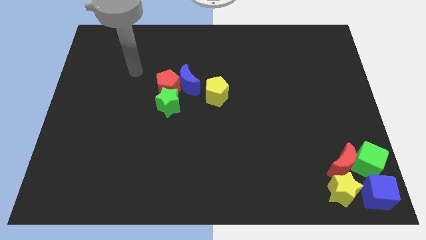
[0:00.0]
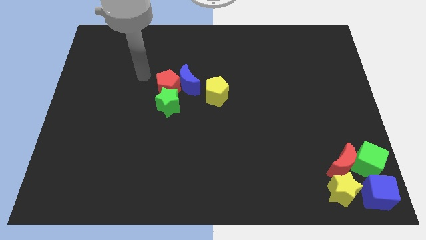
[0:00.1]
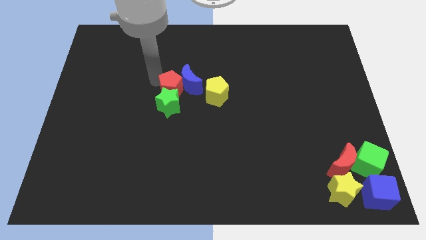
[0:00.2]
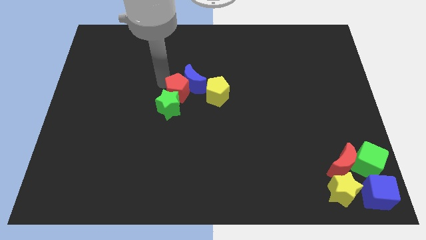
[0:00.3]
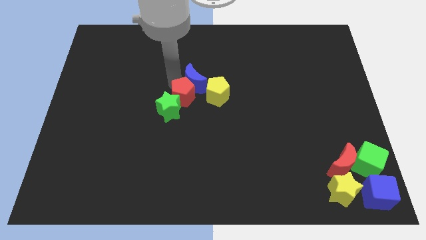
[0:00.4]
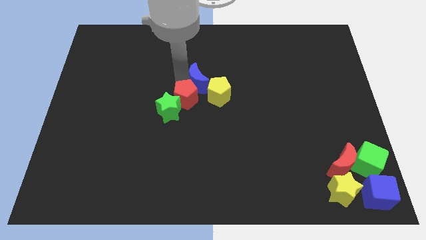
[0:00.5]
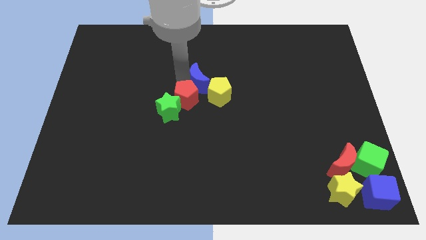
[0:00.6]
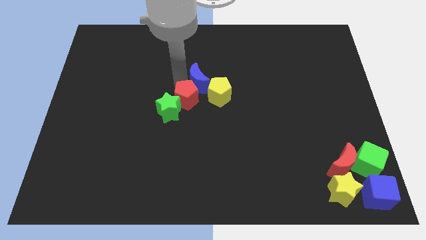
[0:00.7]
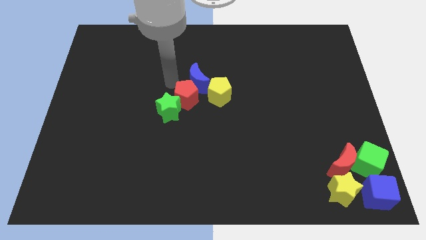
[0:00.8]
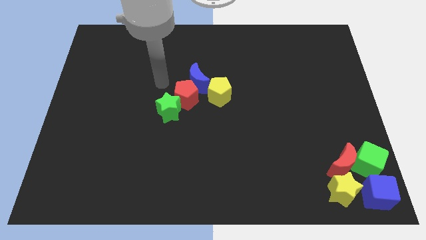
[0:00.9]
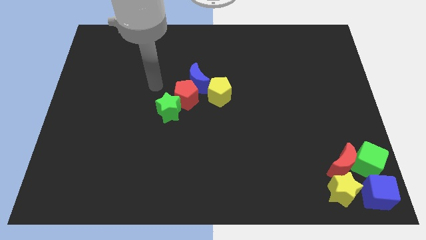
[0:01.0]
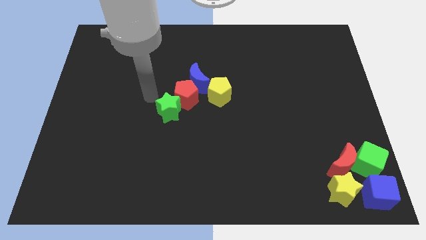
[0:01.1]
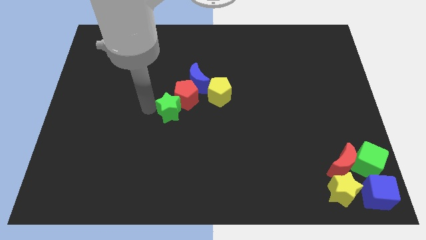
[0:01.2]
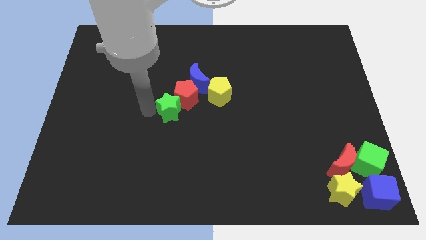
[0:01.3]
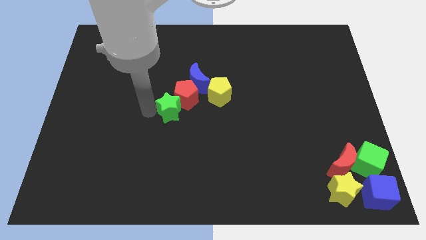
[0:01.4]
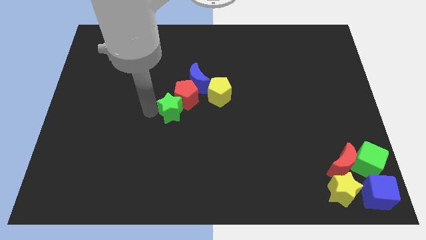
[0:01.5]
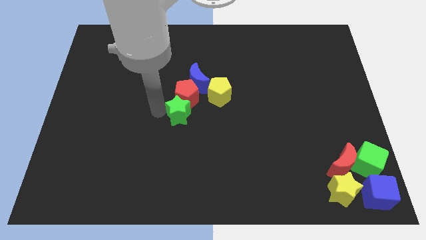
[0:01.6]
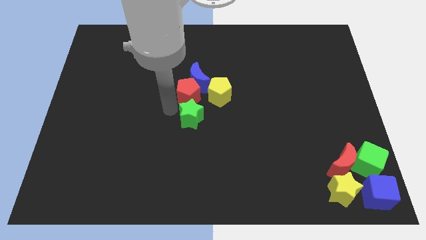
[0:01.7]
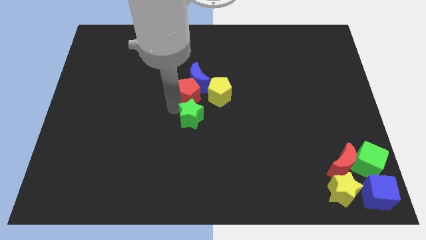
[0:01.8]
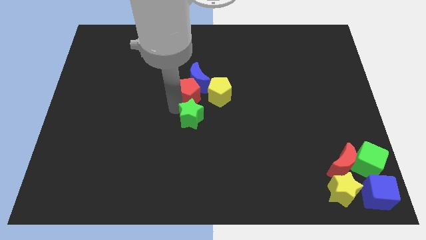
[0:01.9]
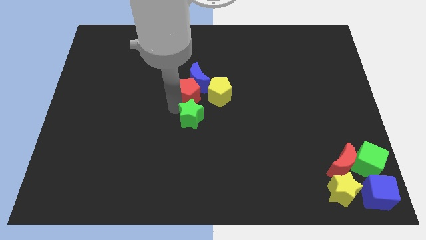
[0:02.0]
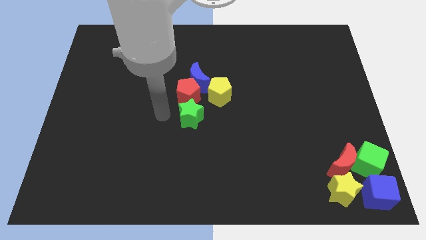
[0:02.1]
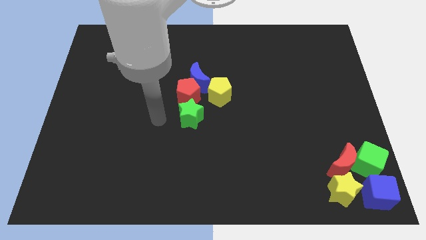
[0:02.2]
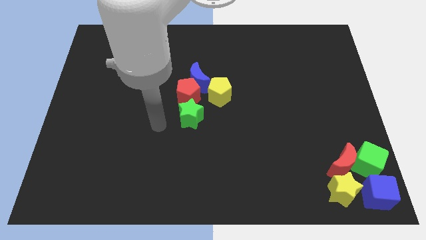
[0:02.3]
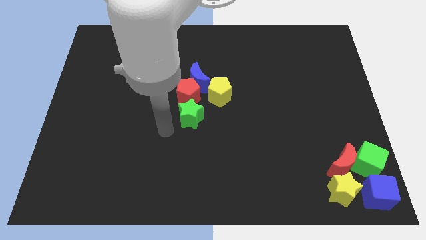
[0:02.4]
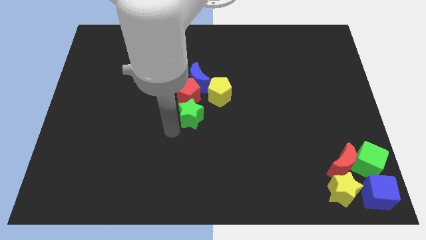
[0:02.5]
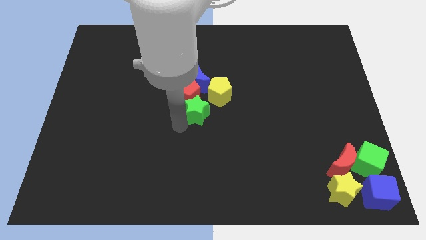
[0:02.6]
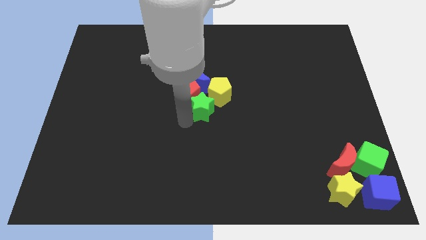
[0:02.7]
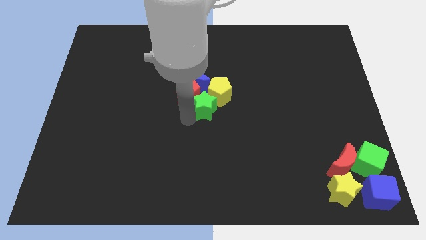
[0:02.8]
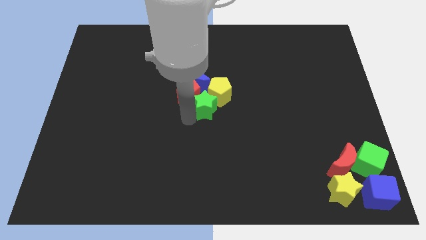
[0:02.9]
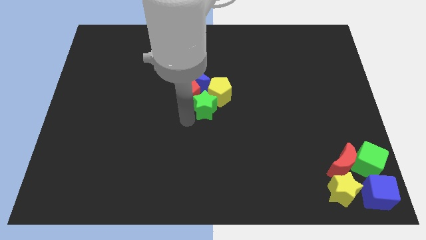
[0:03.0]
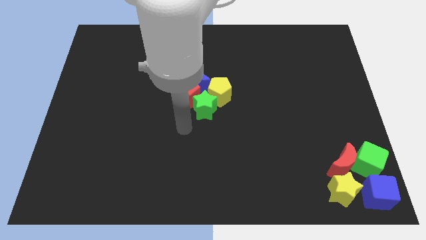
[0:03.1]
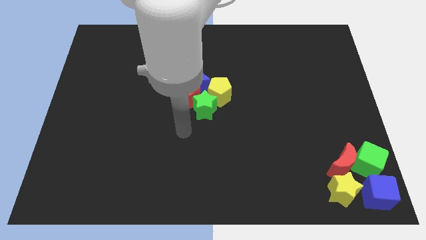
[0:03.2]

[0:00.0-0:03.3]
adjust the red pentagon and the green star to form a group of four blocks

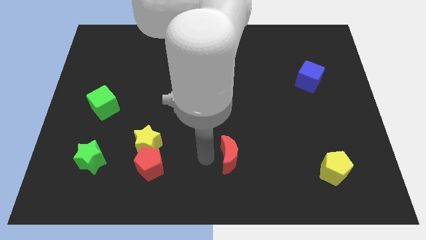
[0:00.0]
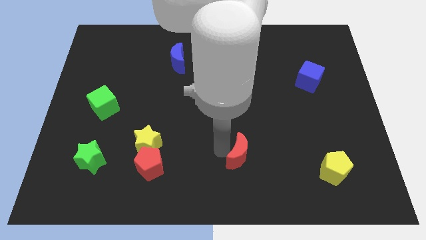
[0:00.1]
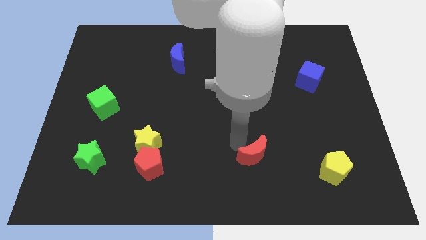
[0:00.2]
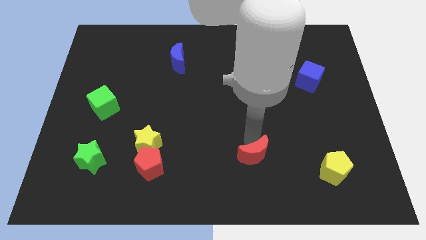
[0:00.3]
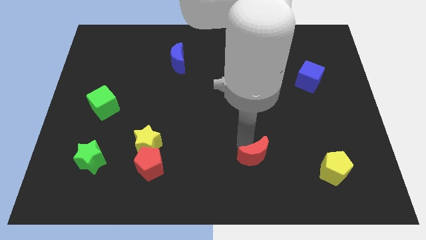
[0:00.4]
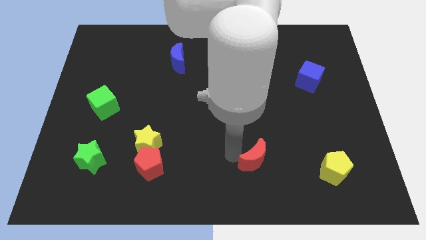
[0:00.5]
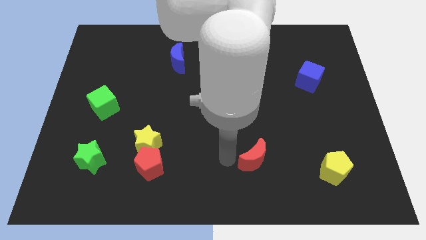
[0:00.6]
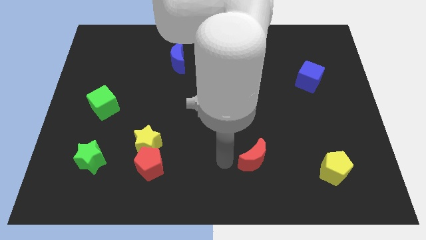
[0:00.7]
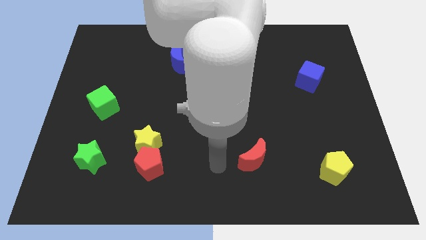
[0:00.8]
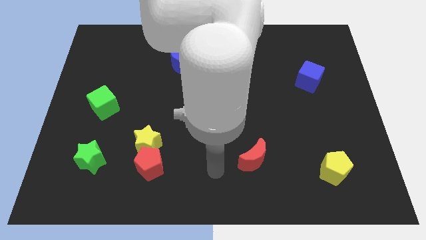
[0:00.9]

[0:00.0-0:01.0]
move red moon towards yellow pentagon

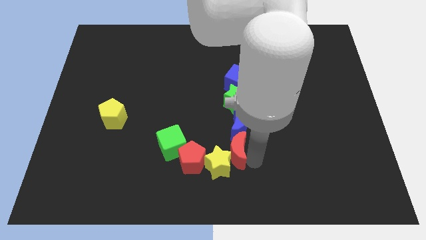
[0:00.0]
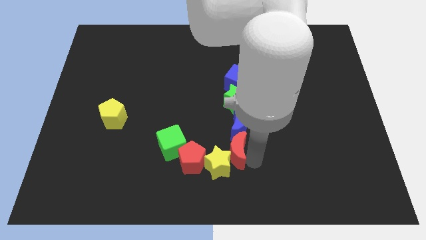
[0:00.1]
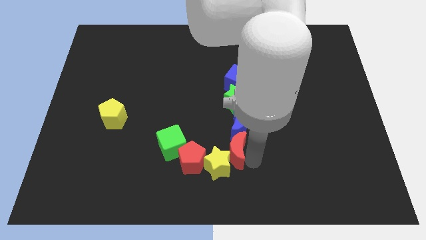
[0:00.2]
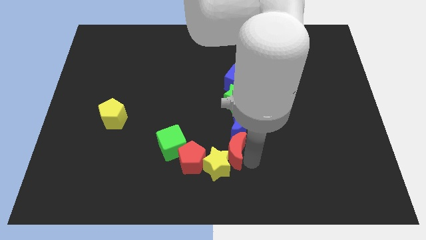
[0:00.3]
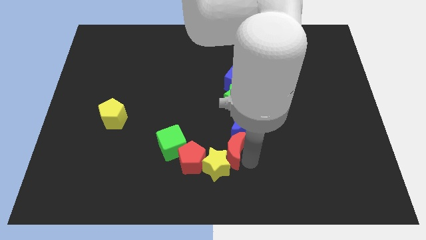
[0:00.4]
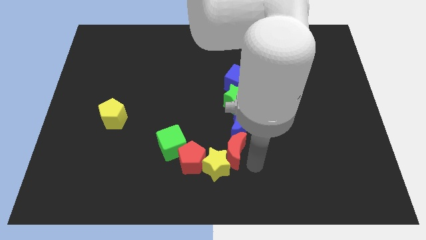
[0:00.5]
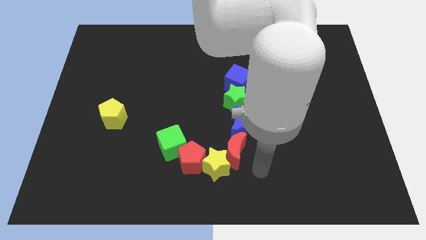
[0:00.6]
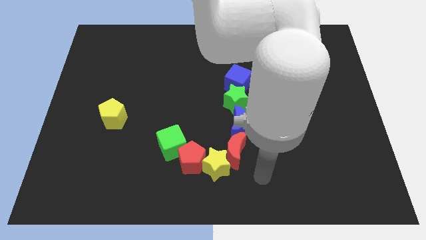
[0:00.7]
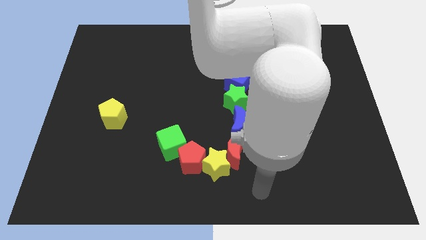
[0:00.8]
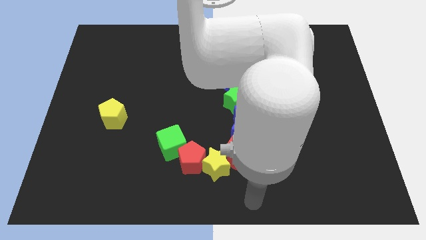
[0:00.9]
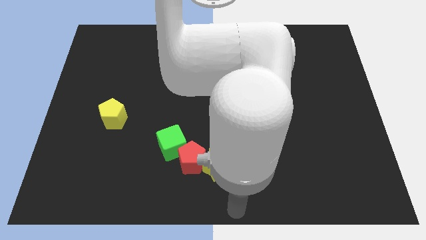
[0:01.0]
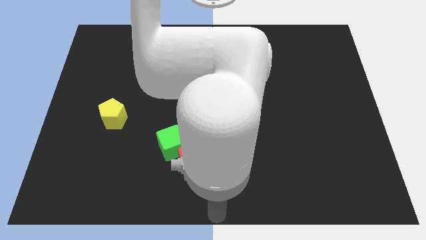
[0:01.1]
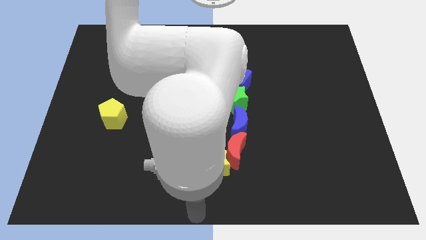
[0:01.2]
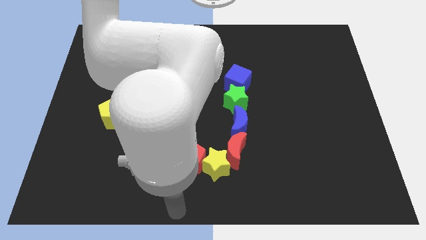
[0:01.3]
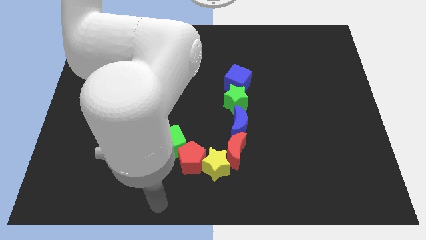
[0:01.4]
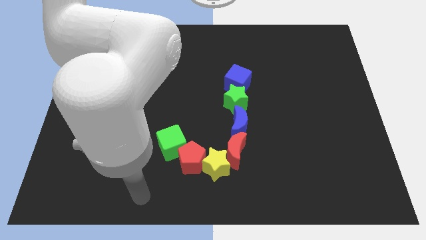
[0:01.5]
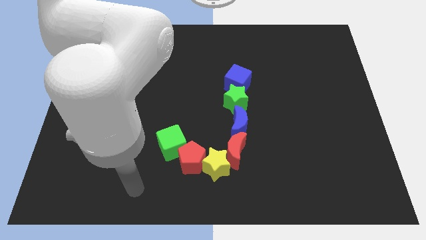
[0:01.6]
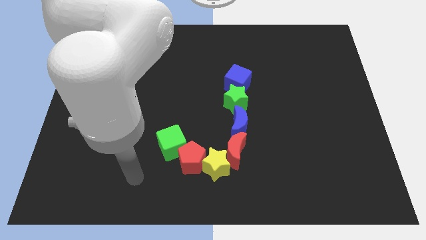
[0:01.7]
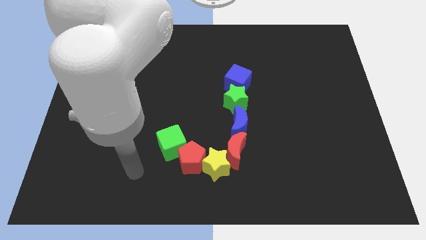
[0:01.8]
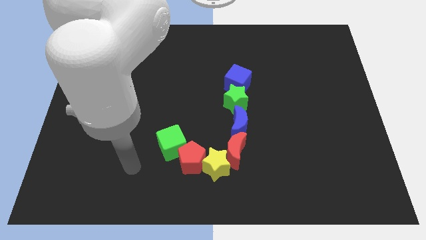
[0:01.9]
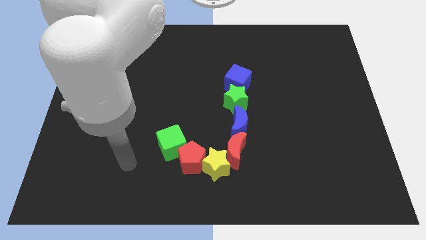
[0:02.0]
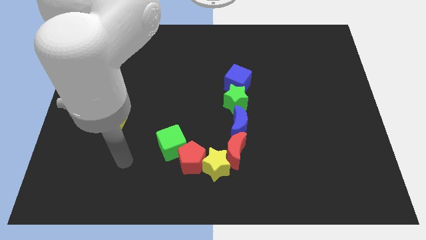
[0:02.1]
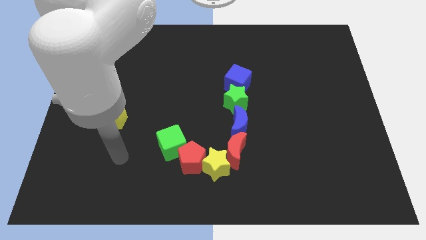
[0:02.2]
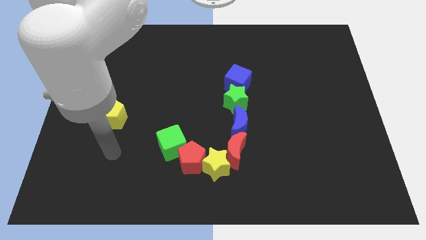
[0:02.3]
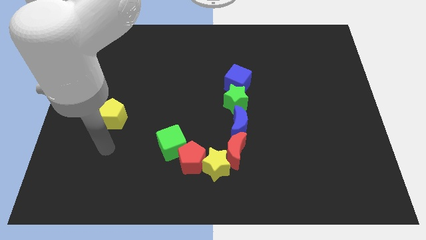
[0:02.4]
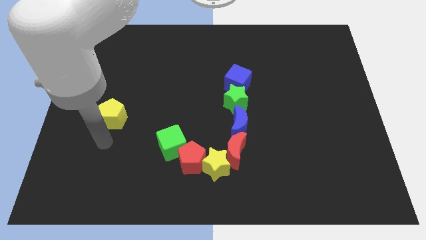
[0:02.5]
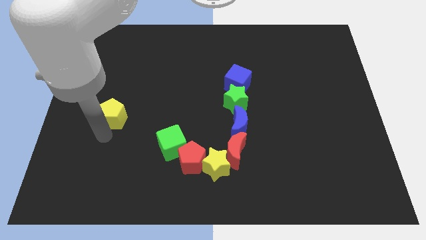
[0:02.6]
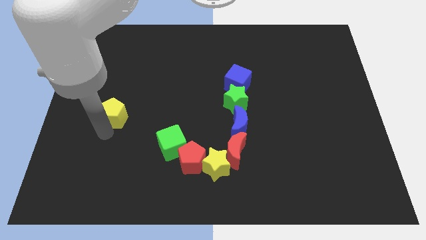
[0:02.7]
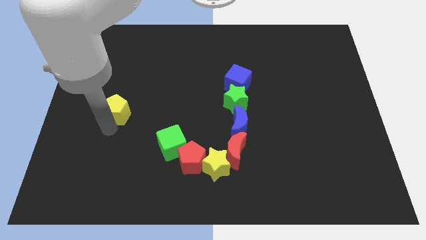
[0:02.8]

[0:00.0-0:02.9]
move your arm away from red moon

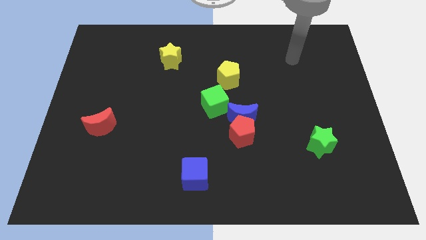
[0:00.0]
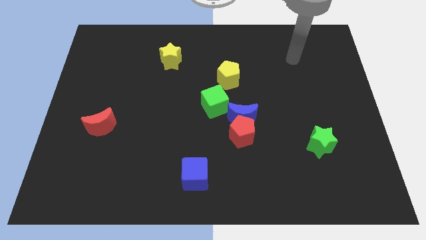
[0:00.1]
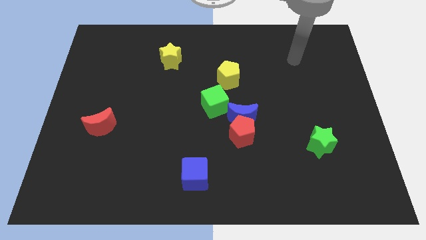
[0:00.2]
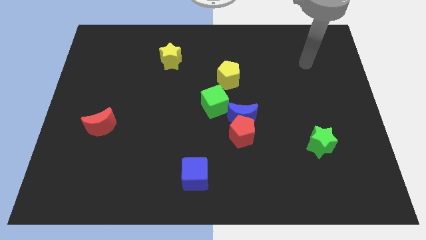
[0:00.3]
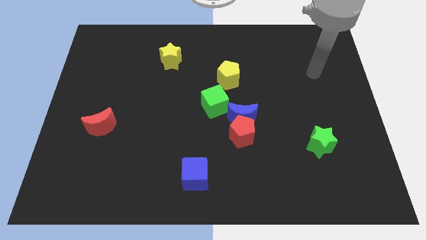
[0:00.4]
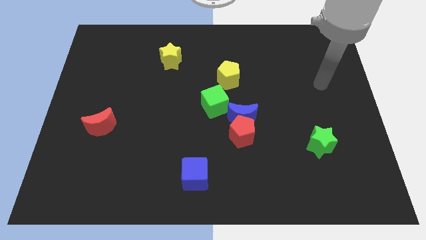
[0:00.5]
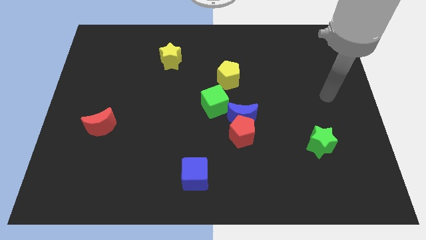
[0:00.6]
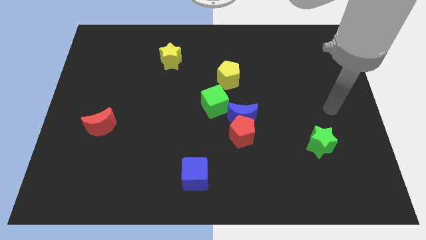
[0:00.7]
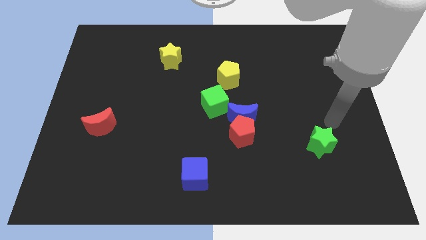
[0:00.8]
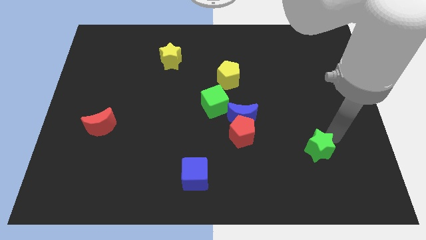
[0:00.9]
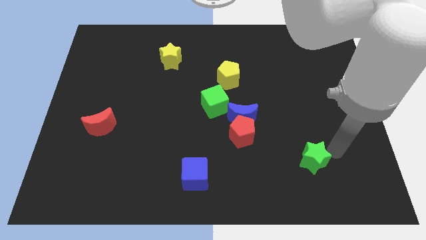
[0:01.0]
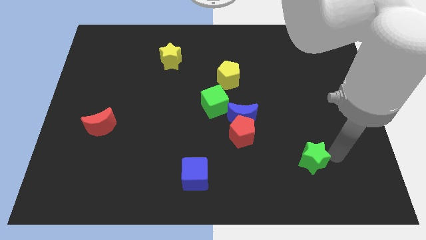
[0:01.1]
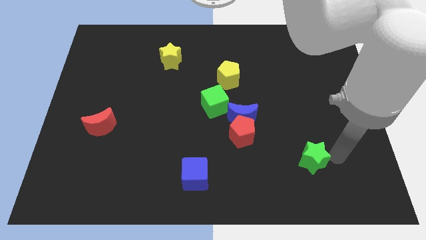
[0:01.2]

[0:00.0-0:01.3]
move the arm to the right of the green star

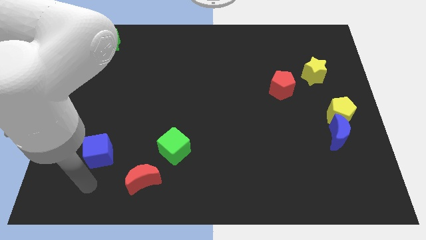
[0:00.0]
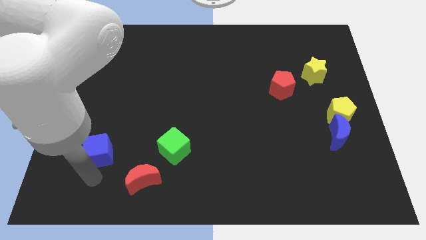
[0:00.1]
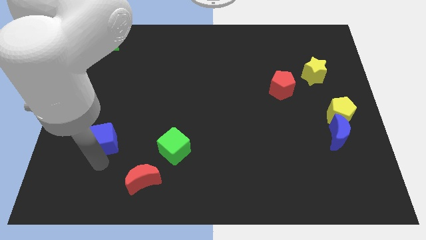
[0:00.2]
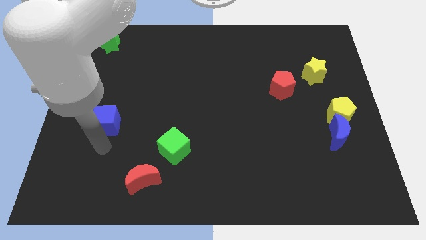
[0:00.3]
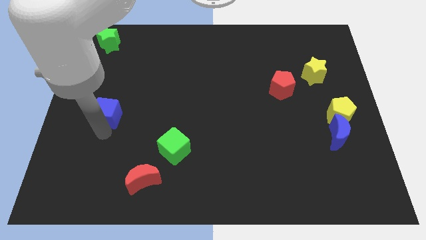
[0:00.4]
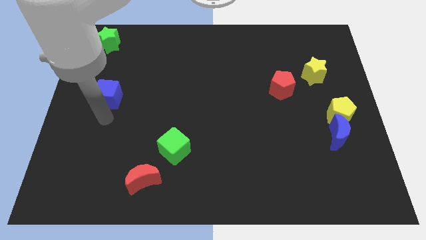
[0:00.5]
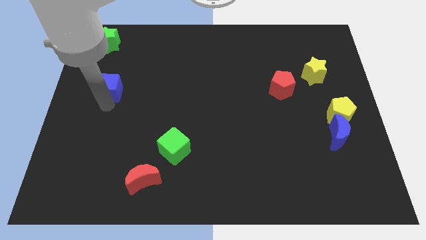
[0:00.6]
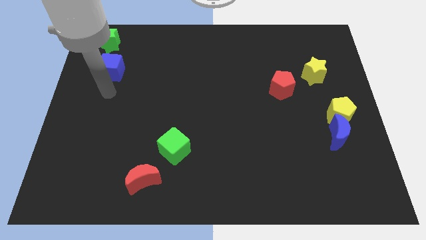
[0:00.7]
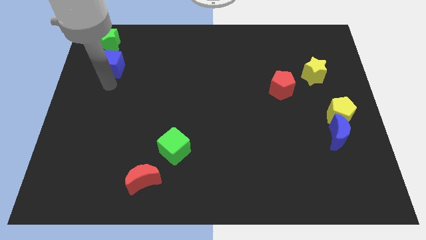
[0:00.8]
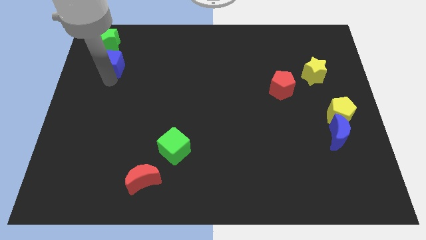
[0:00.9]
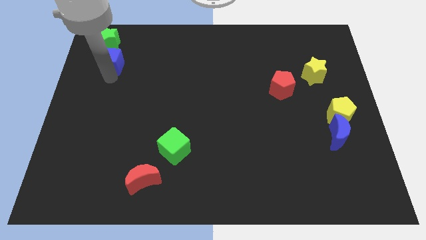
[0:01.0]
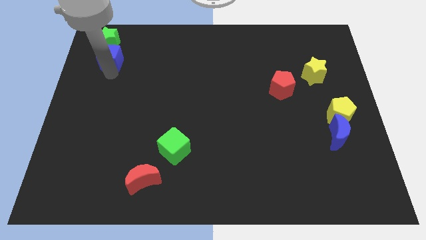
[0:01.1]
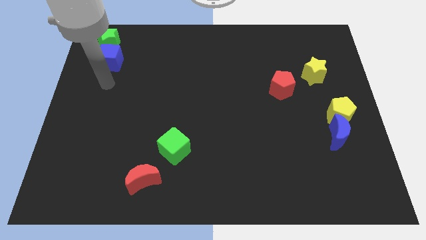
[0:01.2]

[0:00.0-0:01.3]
place the blue cube at the bottom of the green star
